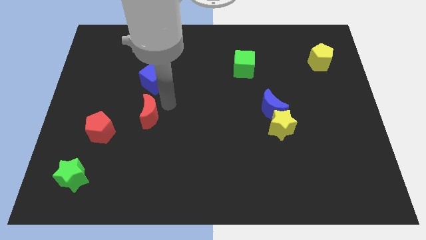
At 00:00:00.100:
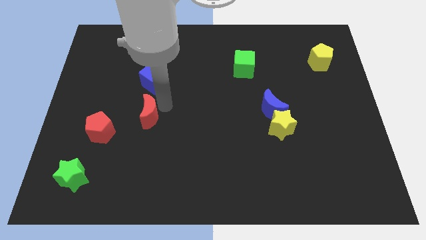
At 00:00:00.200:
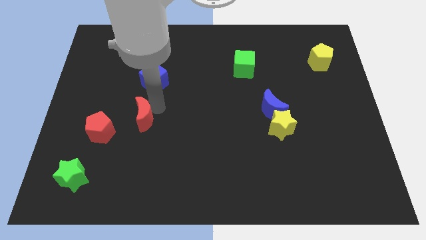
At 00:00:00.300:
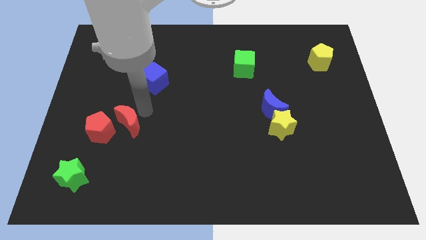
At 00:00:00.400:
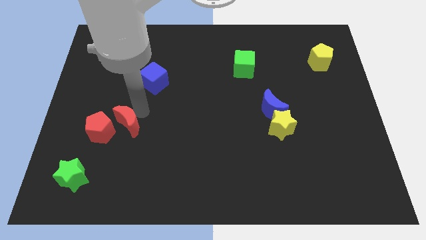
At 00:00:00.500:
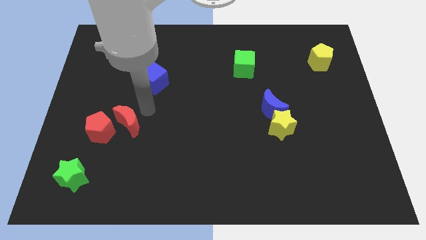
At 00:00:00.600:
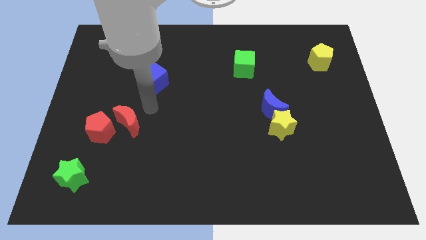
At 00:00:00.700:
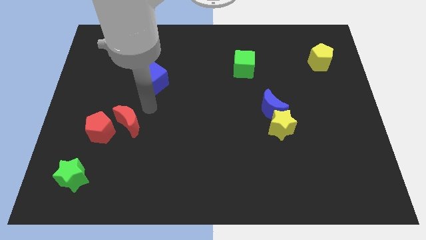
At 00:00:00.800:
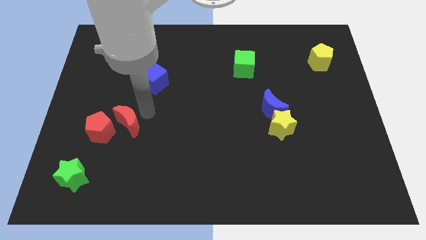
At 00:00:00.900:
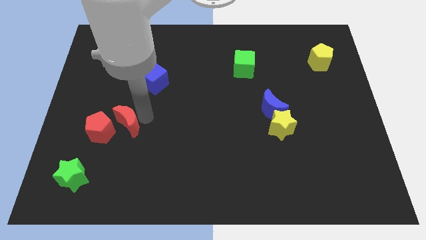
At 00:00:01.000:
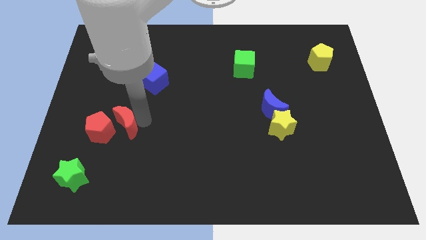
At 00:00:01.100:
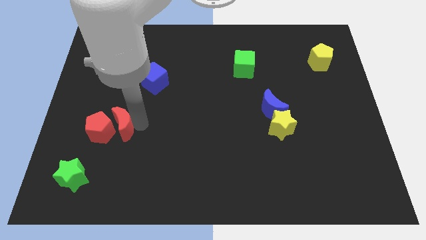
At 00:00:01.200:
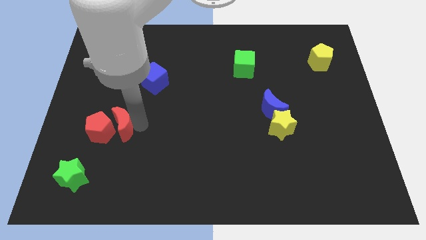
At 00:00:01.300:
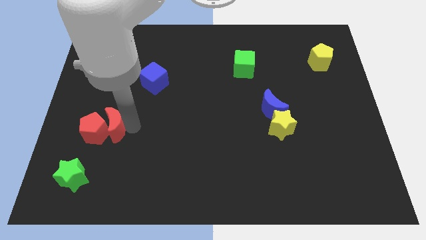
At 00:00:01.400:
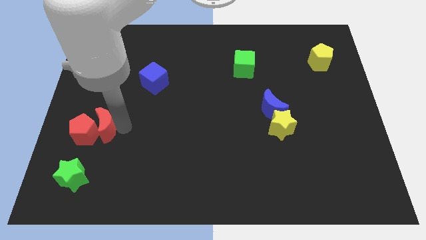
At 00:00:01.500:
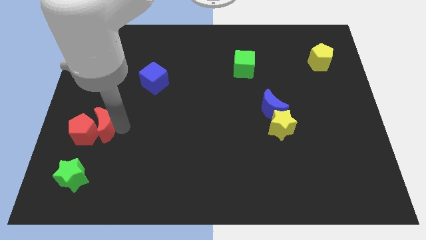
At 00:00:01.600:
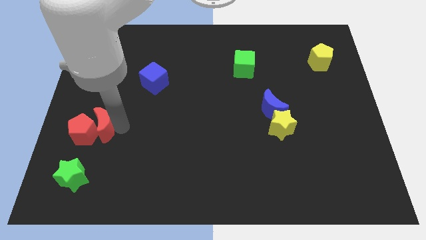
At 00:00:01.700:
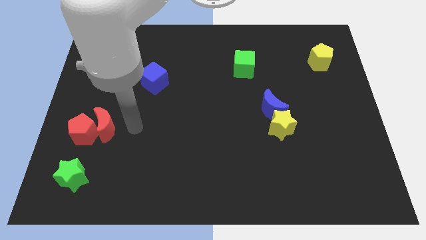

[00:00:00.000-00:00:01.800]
slightly move the red moon to the right side of the red pentagon

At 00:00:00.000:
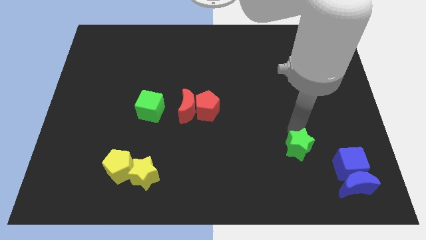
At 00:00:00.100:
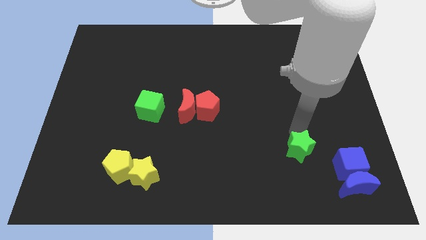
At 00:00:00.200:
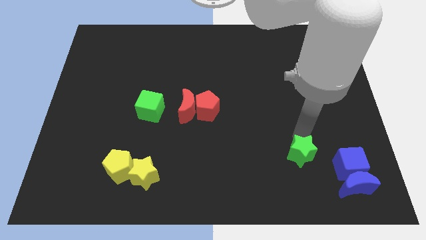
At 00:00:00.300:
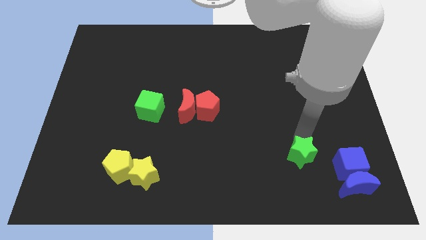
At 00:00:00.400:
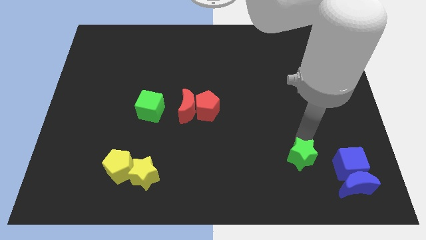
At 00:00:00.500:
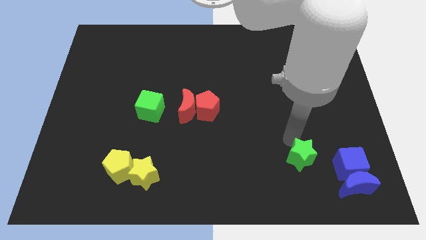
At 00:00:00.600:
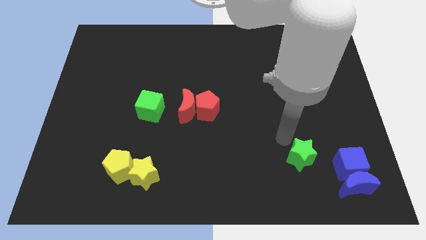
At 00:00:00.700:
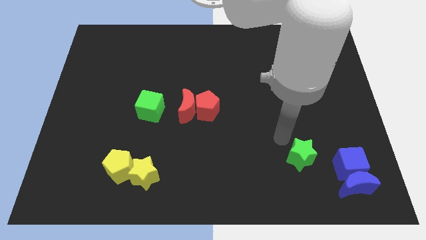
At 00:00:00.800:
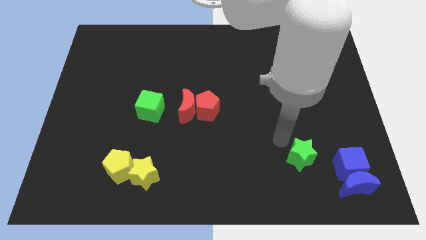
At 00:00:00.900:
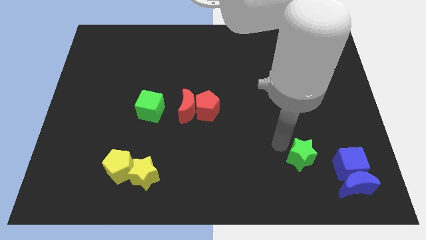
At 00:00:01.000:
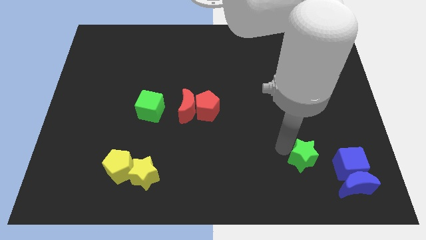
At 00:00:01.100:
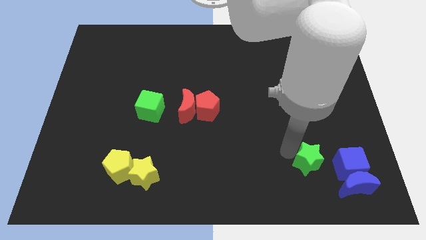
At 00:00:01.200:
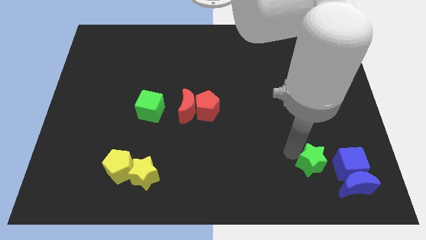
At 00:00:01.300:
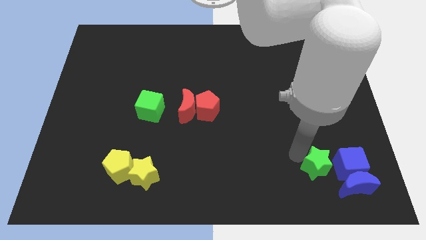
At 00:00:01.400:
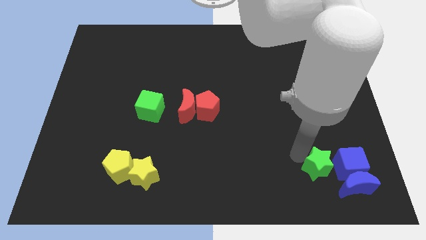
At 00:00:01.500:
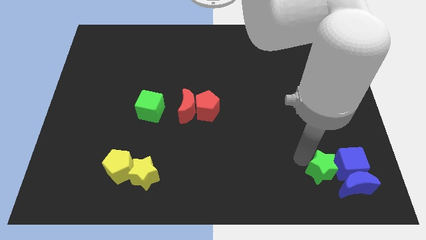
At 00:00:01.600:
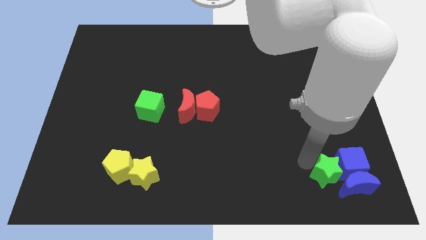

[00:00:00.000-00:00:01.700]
place the green star left to the blue cube

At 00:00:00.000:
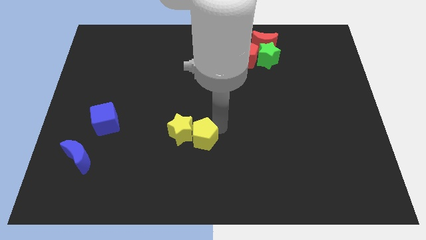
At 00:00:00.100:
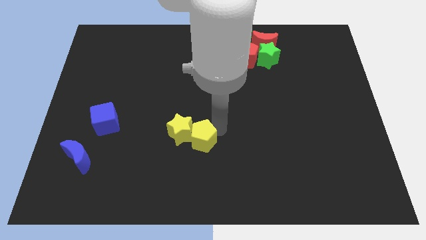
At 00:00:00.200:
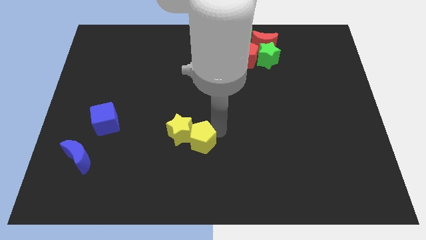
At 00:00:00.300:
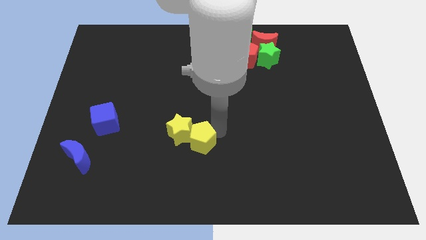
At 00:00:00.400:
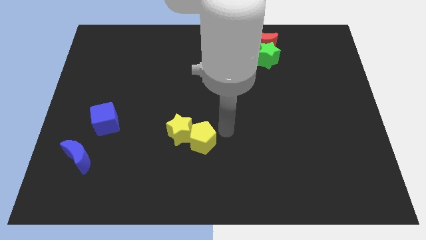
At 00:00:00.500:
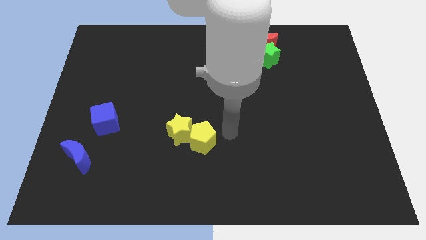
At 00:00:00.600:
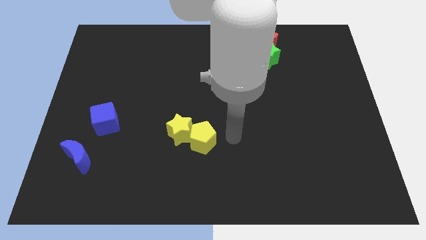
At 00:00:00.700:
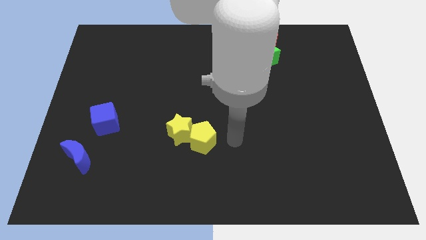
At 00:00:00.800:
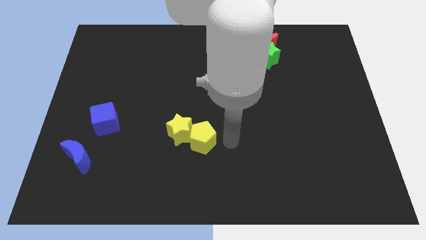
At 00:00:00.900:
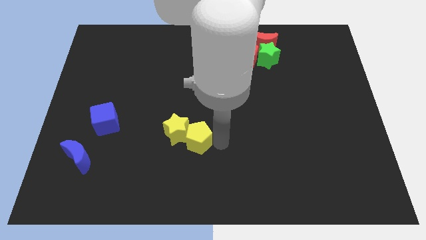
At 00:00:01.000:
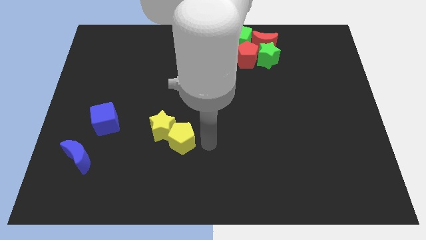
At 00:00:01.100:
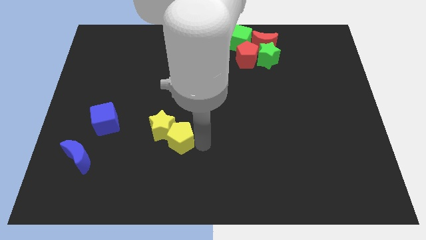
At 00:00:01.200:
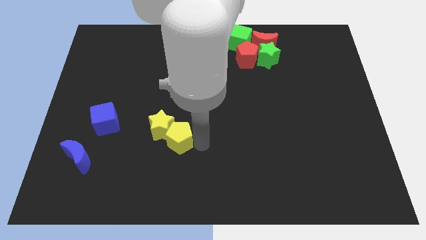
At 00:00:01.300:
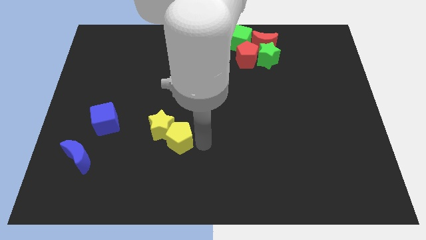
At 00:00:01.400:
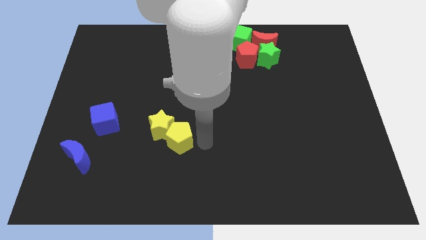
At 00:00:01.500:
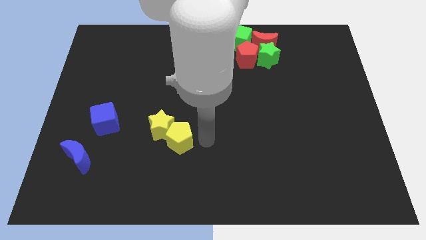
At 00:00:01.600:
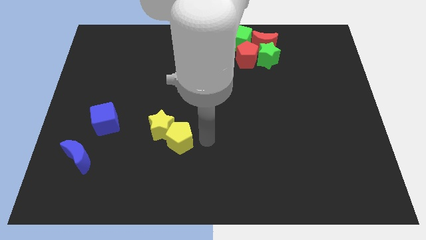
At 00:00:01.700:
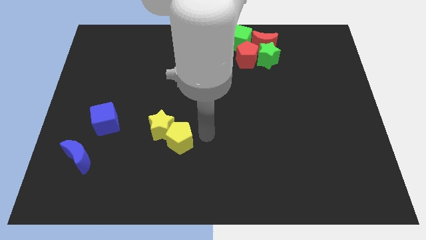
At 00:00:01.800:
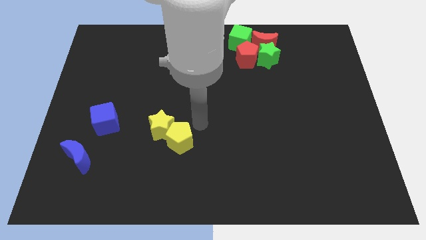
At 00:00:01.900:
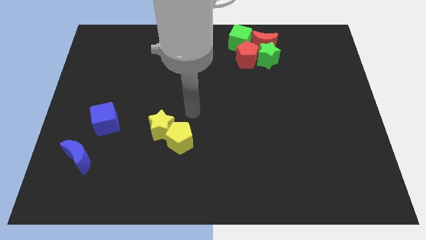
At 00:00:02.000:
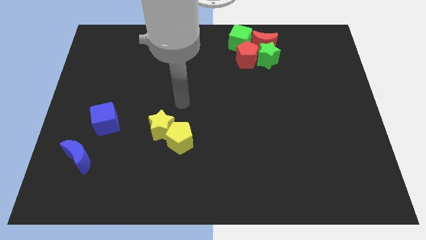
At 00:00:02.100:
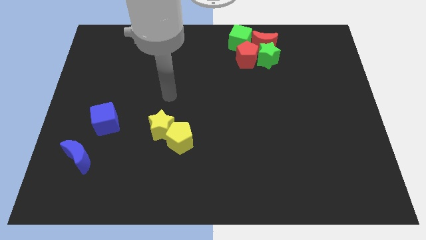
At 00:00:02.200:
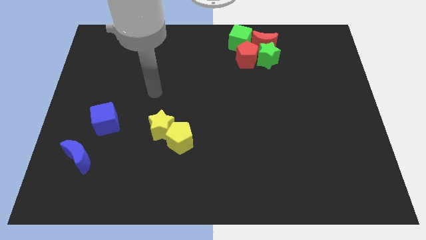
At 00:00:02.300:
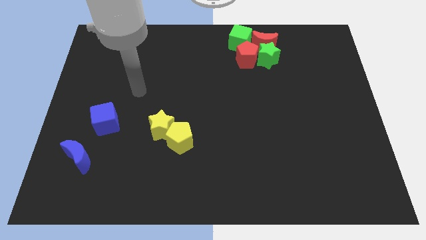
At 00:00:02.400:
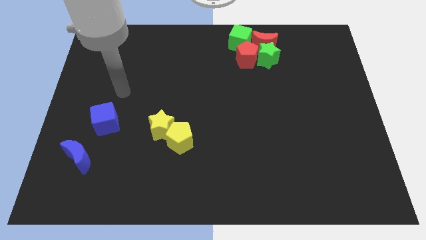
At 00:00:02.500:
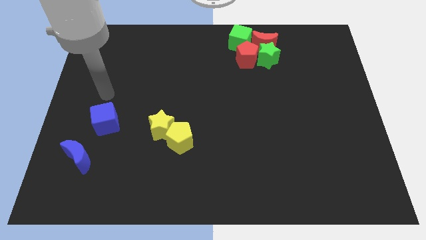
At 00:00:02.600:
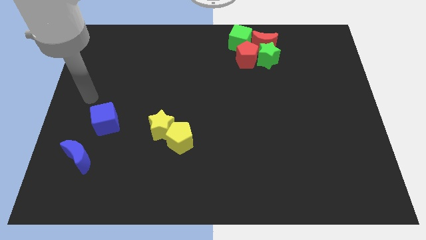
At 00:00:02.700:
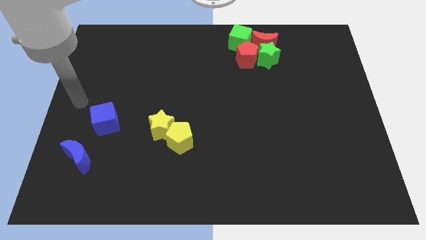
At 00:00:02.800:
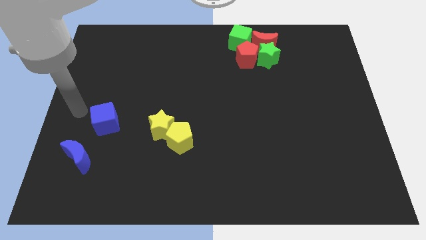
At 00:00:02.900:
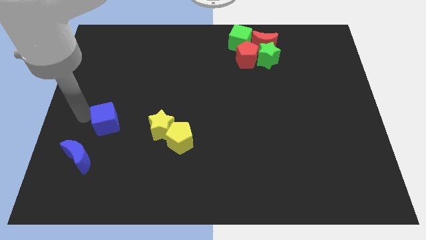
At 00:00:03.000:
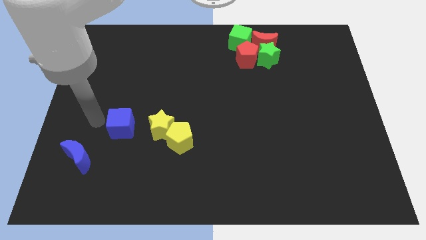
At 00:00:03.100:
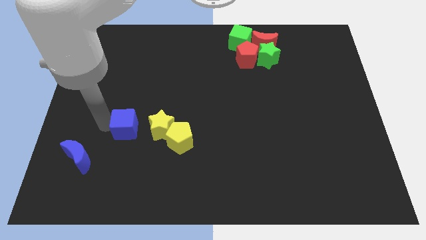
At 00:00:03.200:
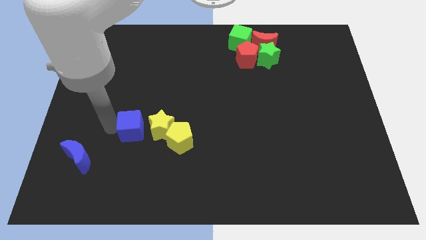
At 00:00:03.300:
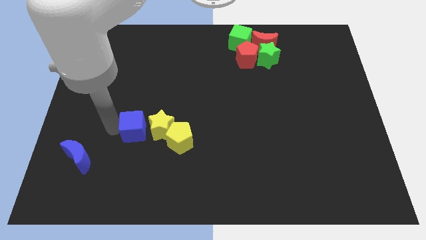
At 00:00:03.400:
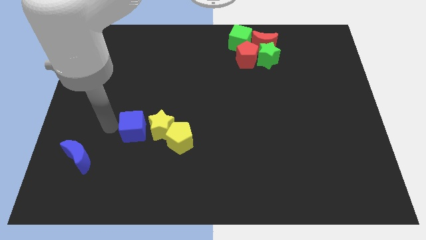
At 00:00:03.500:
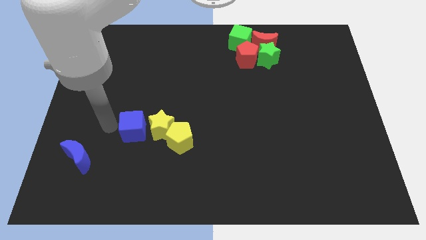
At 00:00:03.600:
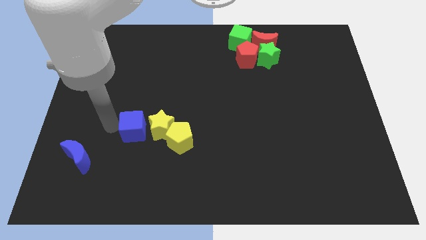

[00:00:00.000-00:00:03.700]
push blue cube to the left of the yellow star

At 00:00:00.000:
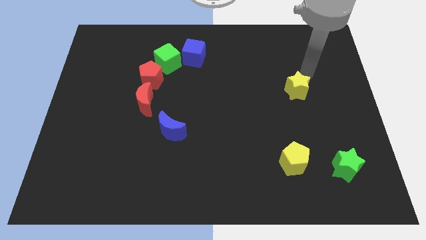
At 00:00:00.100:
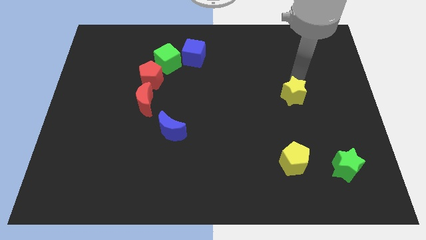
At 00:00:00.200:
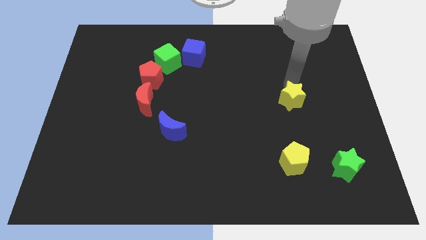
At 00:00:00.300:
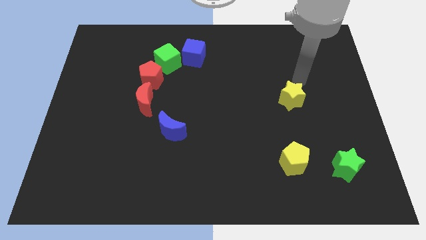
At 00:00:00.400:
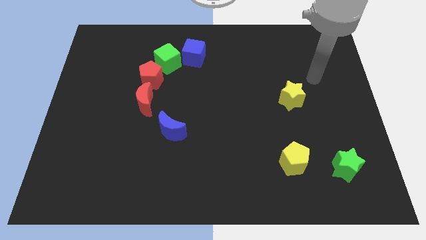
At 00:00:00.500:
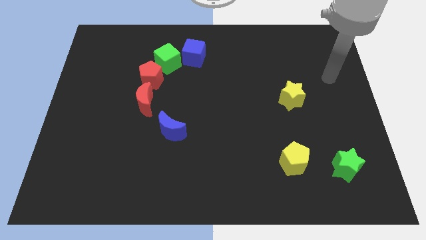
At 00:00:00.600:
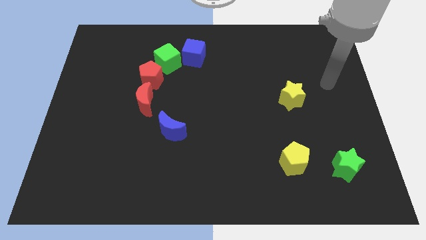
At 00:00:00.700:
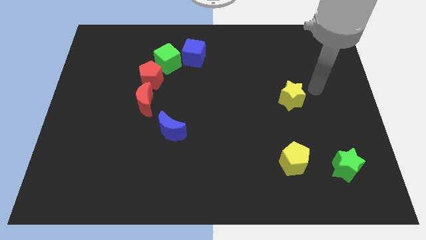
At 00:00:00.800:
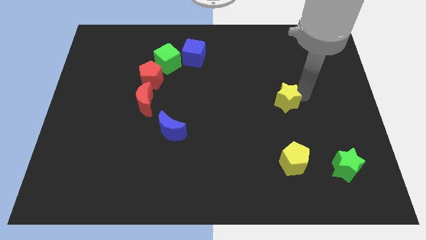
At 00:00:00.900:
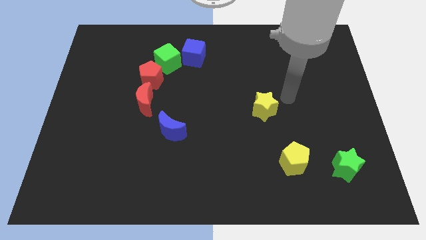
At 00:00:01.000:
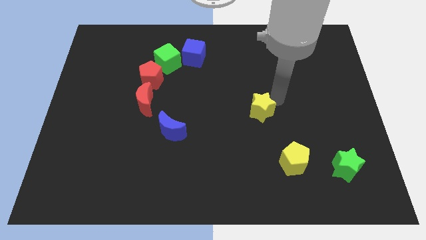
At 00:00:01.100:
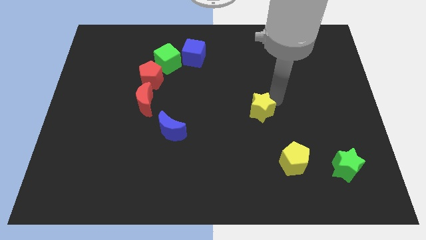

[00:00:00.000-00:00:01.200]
push yellow star slightly to the bottom side of the board

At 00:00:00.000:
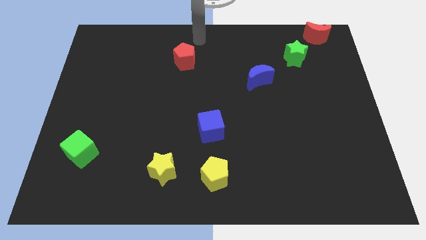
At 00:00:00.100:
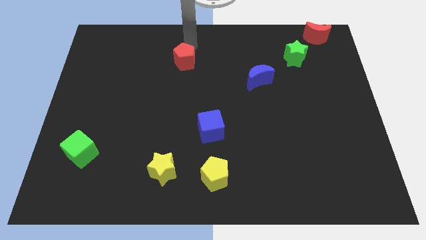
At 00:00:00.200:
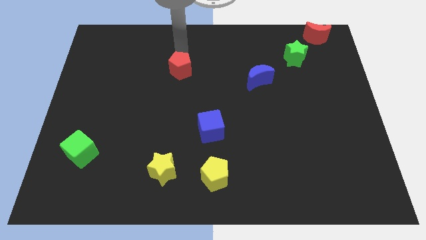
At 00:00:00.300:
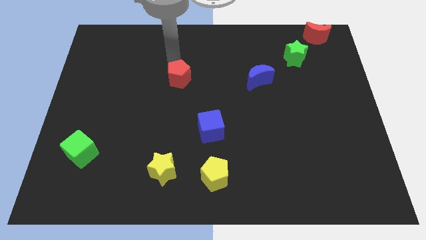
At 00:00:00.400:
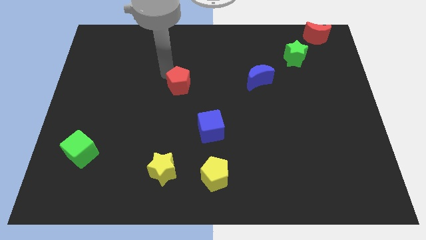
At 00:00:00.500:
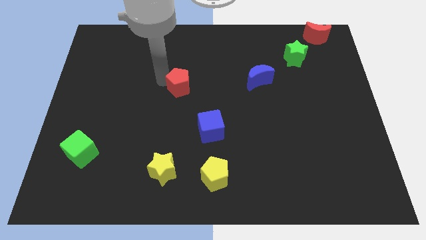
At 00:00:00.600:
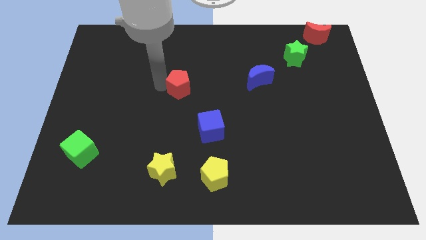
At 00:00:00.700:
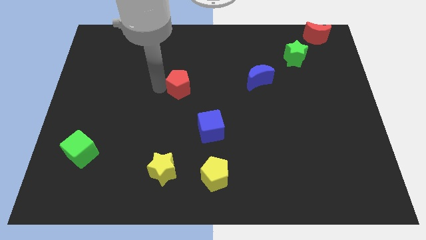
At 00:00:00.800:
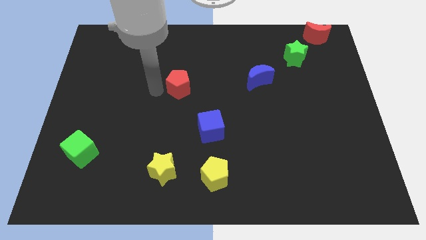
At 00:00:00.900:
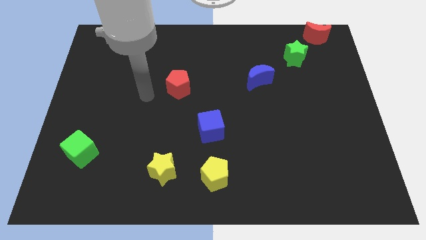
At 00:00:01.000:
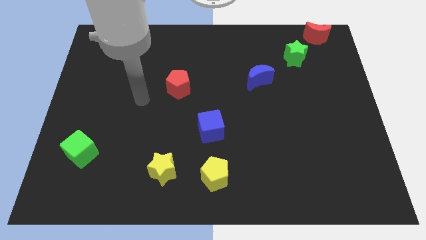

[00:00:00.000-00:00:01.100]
slightly push red pentagon down
